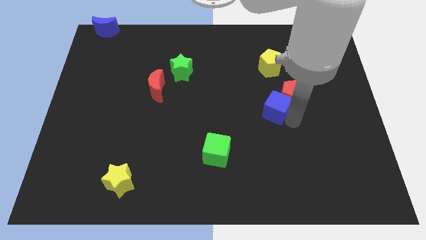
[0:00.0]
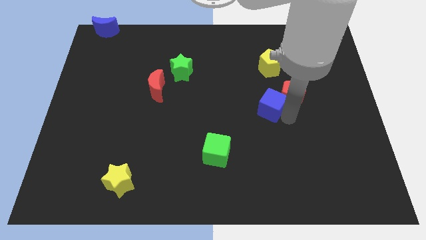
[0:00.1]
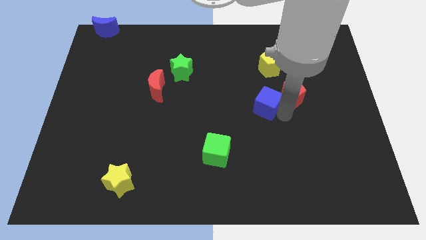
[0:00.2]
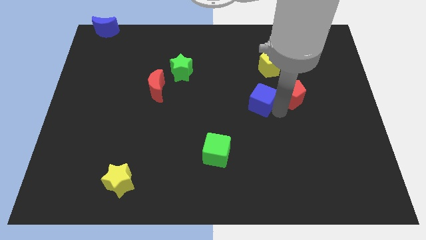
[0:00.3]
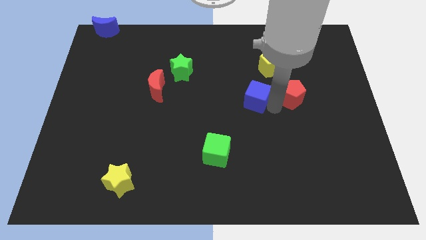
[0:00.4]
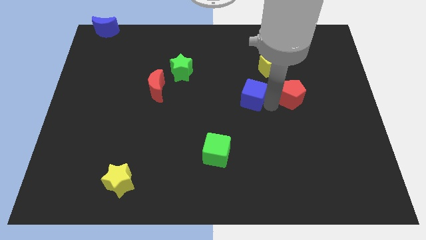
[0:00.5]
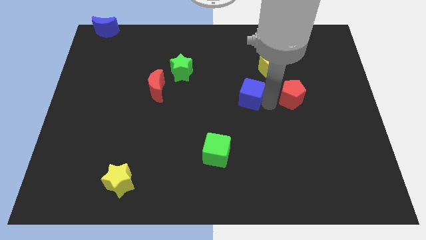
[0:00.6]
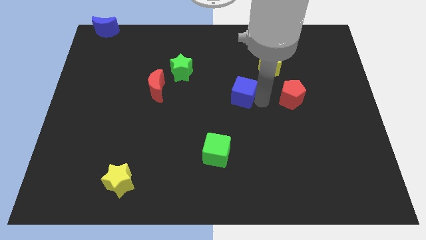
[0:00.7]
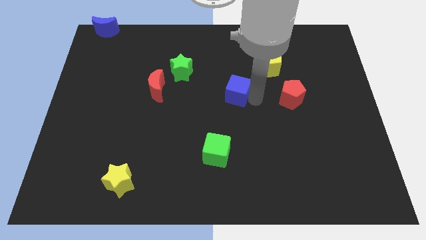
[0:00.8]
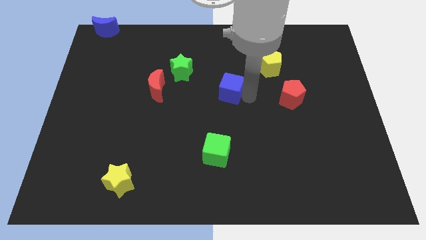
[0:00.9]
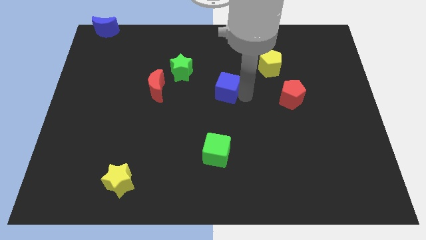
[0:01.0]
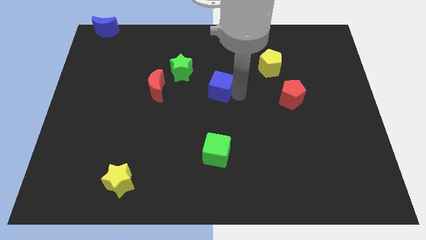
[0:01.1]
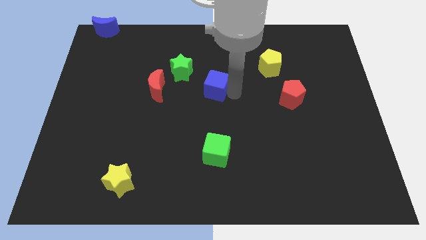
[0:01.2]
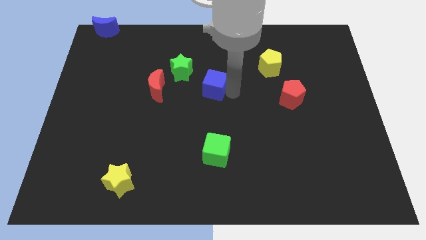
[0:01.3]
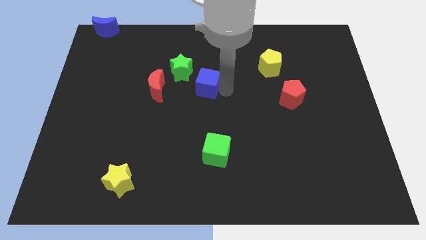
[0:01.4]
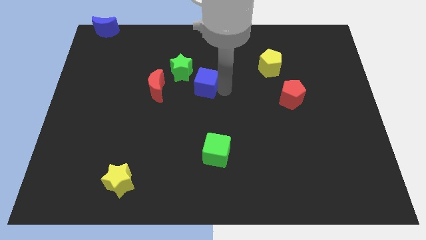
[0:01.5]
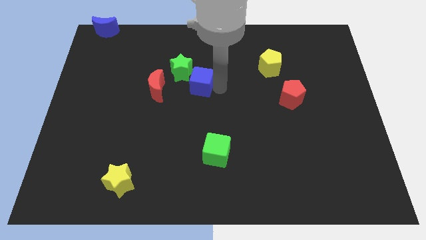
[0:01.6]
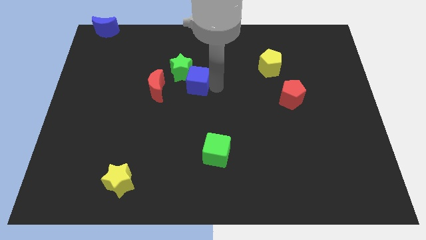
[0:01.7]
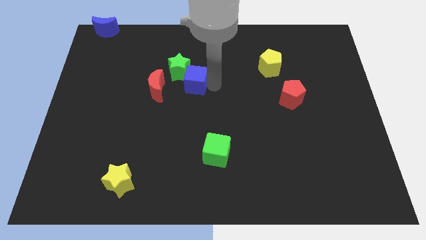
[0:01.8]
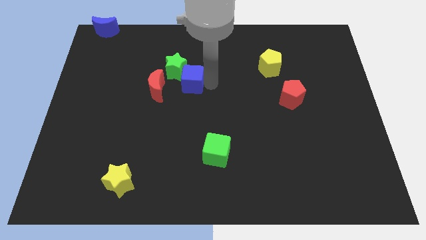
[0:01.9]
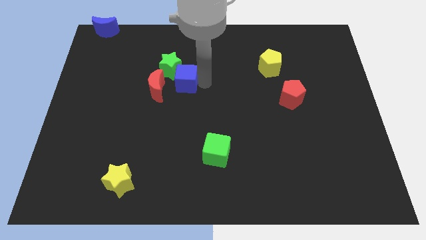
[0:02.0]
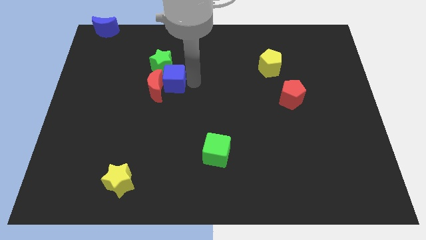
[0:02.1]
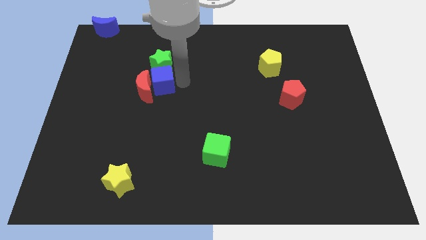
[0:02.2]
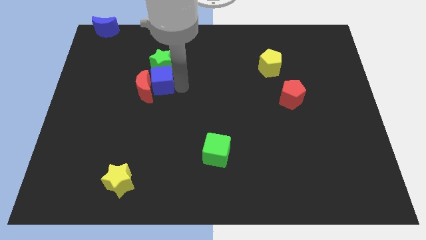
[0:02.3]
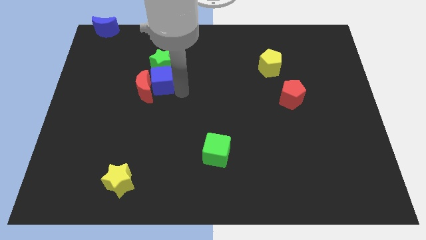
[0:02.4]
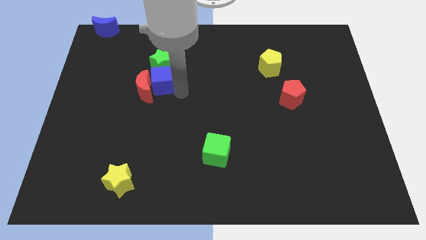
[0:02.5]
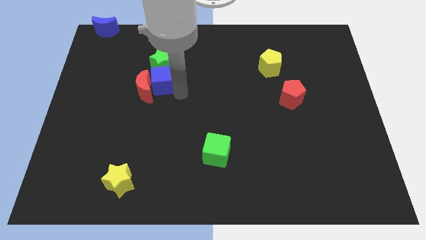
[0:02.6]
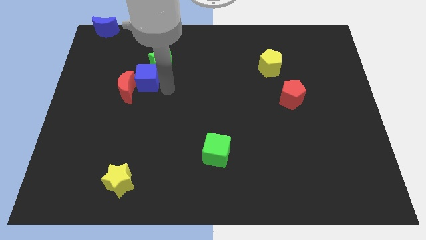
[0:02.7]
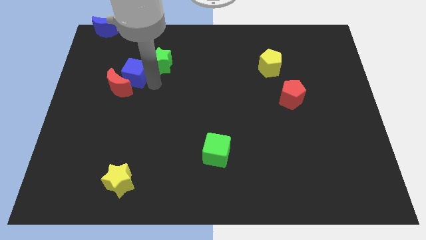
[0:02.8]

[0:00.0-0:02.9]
move the blue cube into the red crescent

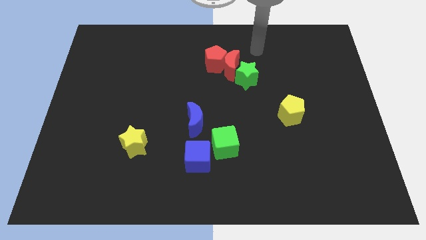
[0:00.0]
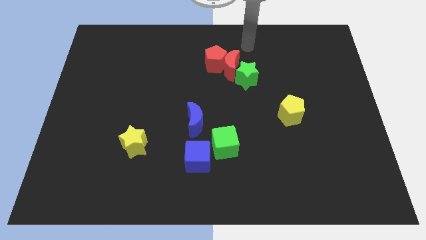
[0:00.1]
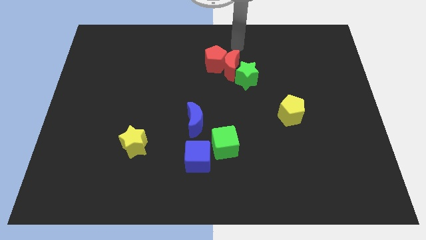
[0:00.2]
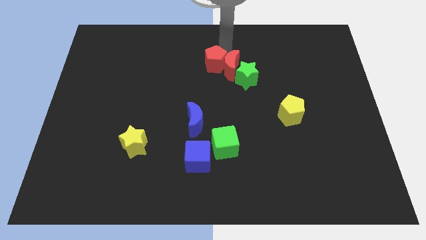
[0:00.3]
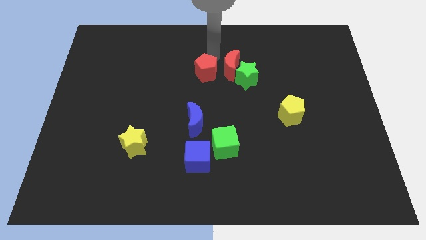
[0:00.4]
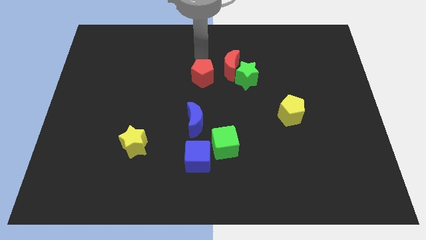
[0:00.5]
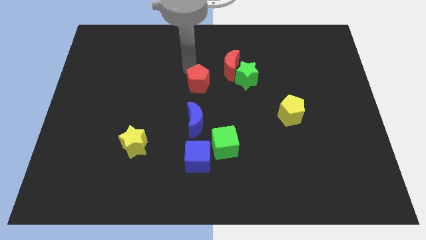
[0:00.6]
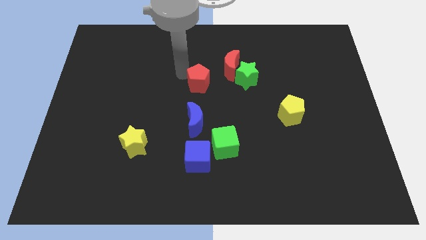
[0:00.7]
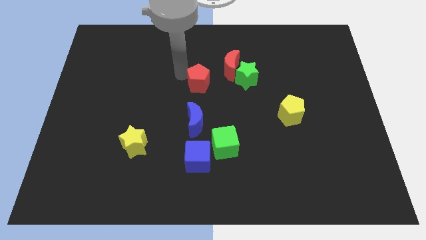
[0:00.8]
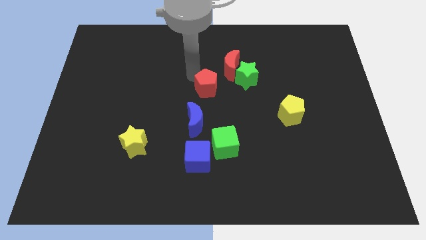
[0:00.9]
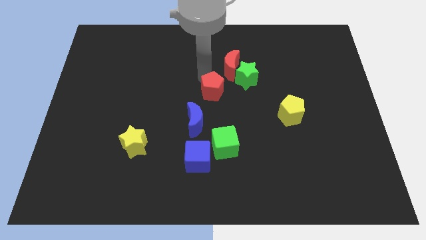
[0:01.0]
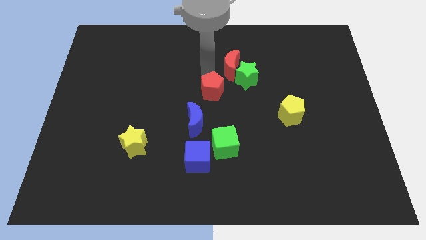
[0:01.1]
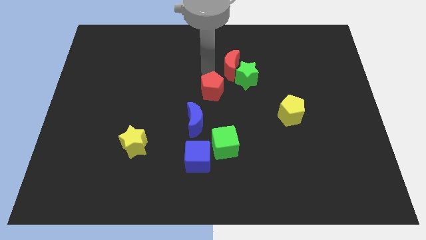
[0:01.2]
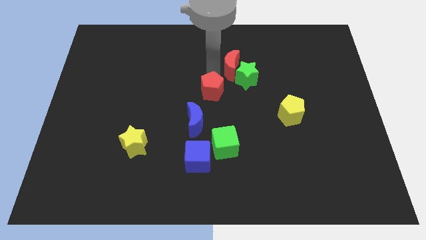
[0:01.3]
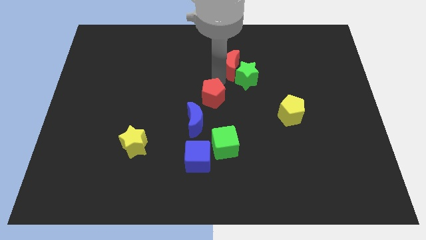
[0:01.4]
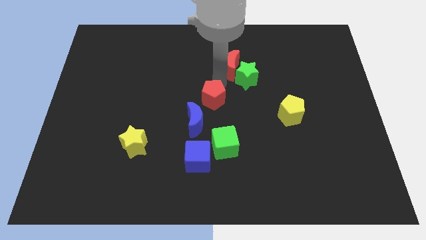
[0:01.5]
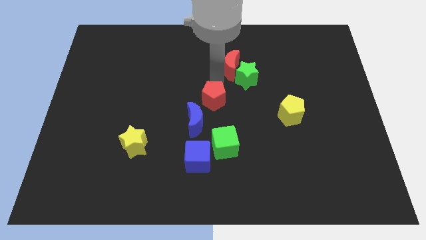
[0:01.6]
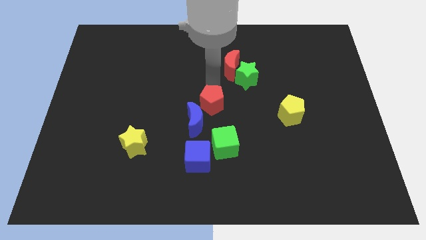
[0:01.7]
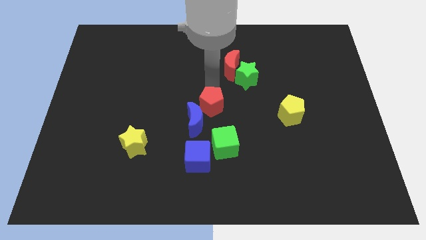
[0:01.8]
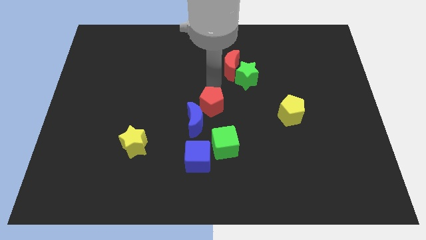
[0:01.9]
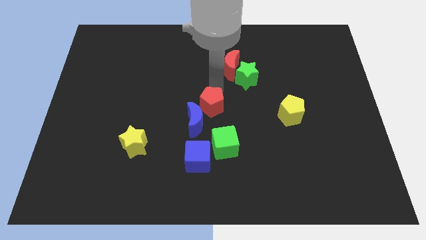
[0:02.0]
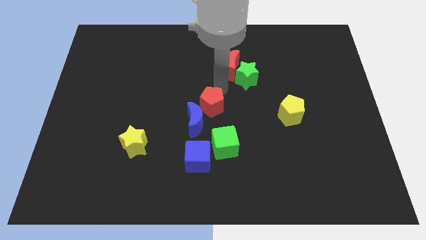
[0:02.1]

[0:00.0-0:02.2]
move the red pentagon to the center

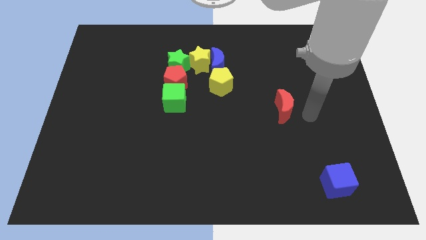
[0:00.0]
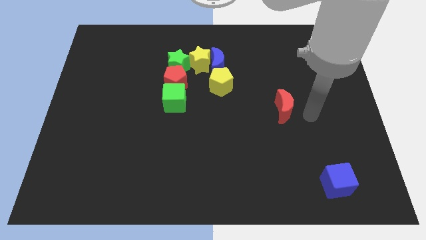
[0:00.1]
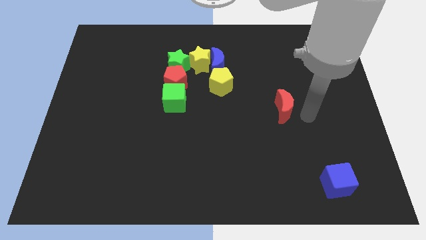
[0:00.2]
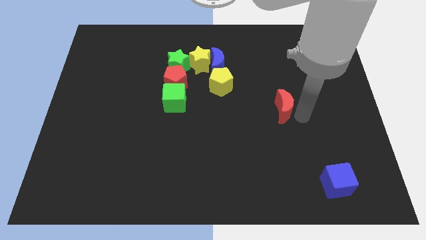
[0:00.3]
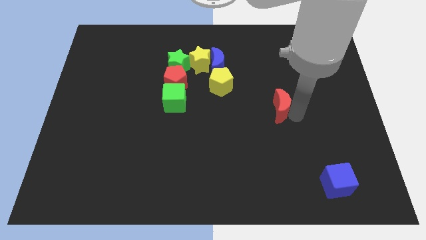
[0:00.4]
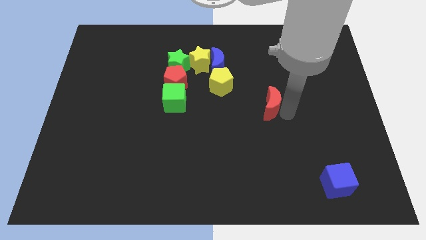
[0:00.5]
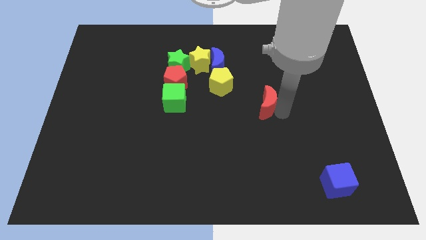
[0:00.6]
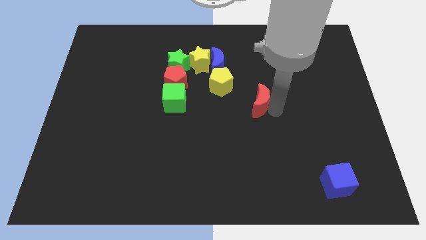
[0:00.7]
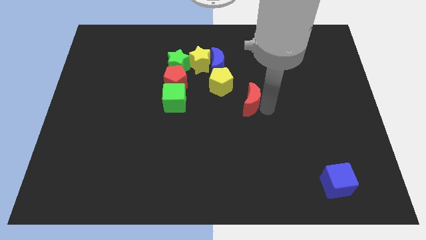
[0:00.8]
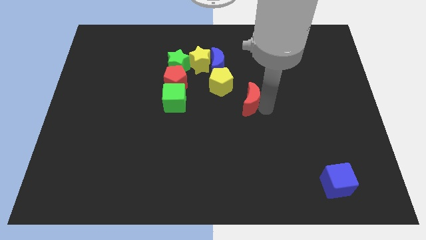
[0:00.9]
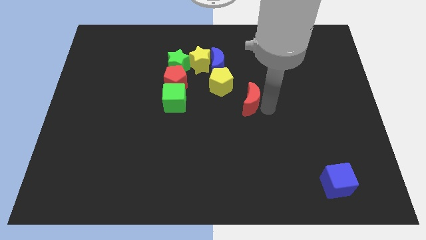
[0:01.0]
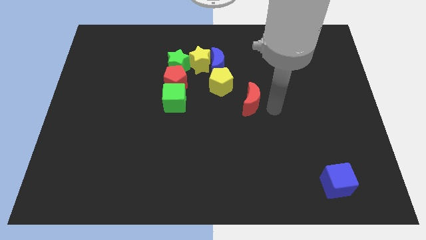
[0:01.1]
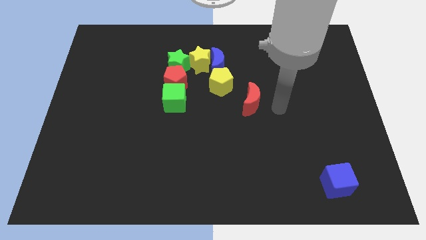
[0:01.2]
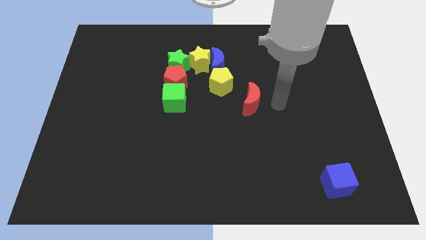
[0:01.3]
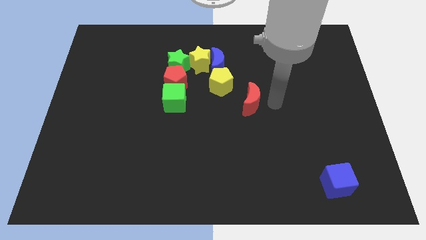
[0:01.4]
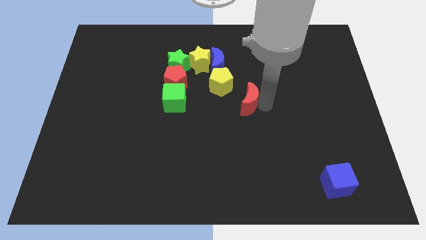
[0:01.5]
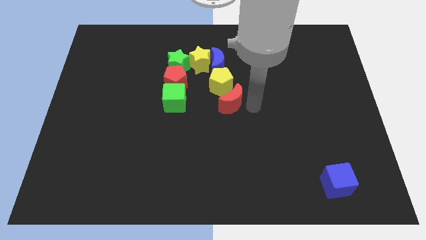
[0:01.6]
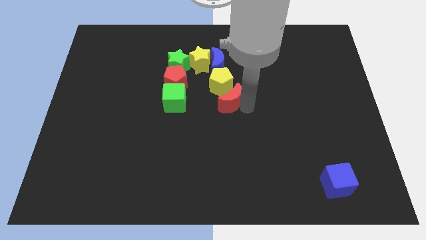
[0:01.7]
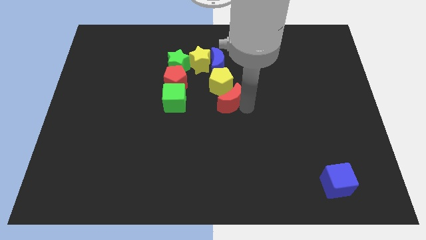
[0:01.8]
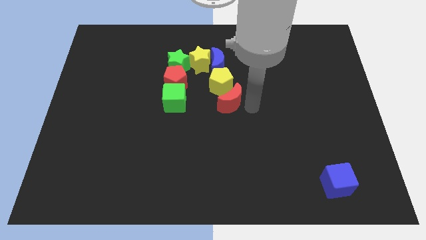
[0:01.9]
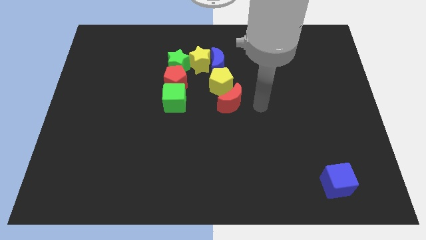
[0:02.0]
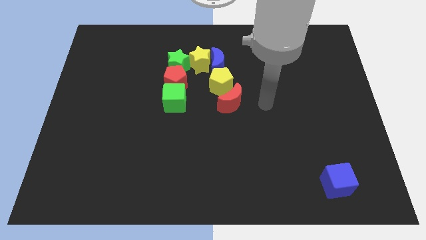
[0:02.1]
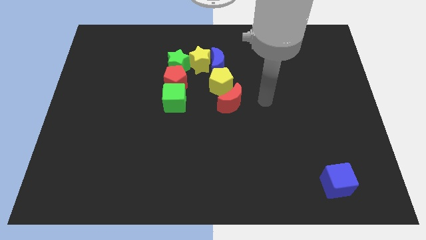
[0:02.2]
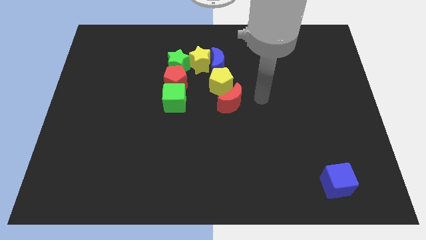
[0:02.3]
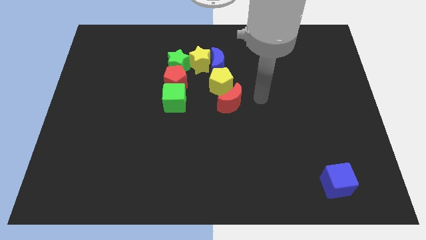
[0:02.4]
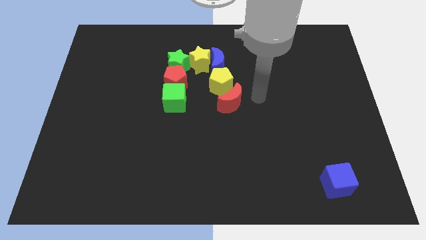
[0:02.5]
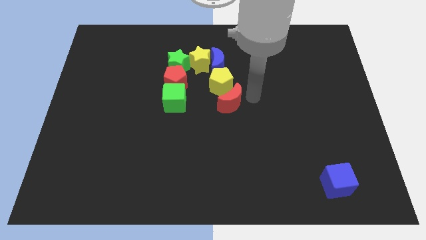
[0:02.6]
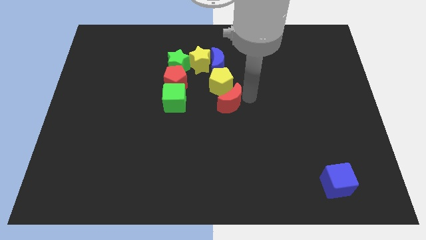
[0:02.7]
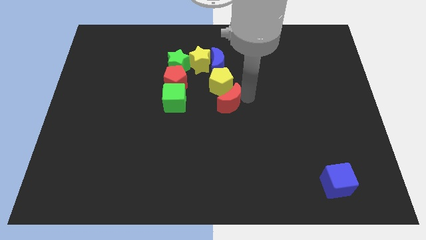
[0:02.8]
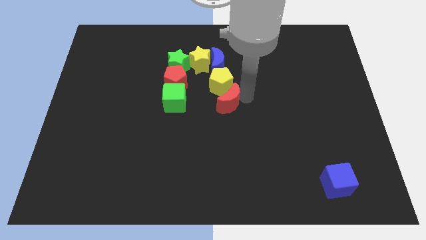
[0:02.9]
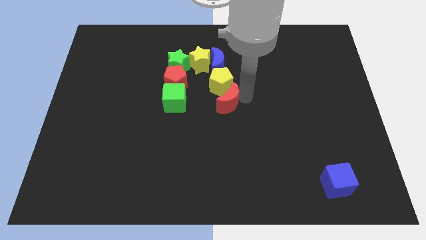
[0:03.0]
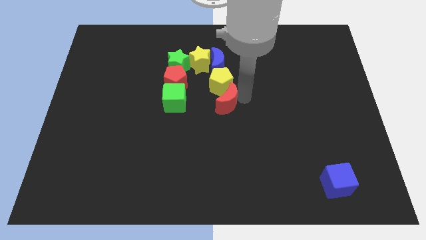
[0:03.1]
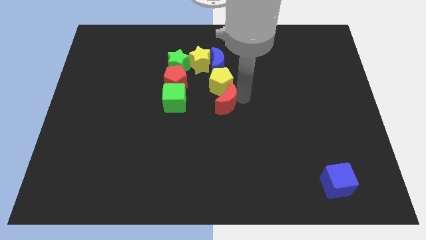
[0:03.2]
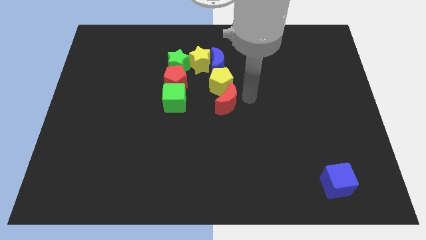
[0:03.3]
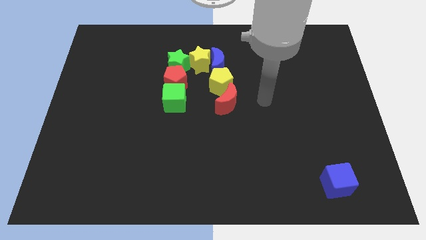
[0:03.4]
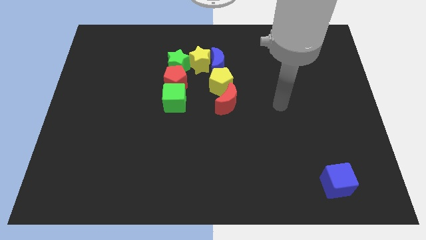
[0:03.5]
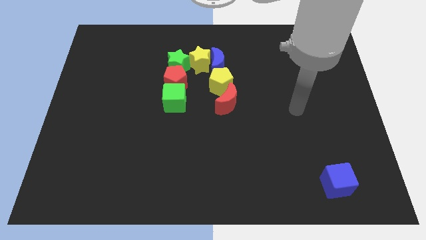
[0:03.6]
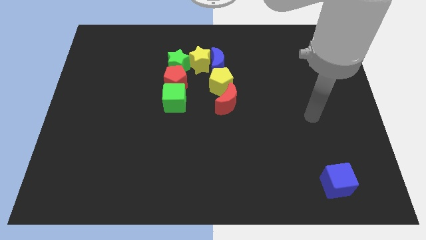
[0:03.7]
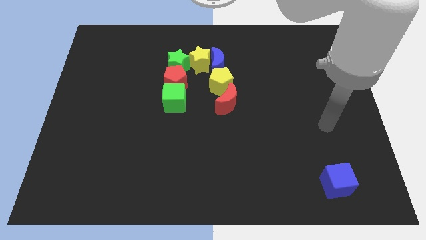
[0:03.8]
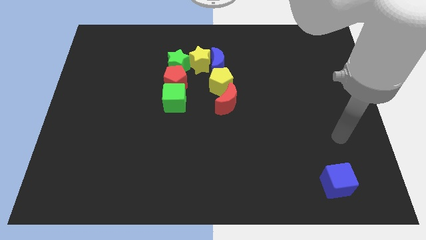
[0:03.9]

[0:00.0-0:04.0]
move the red moon down to the yellow pentagon
